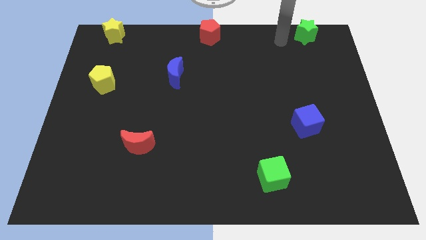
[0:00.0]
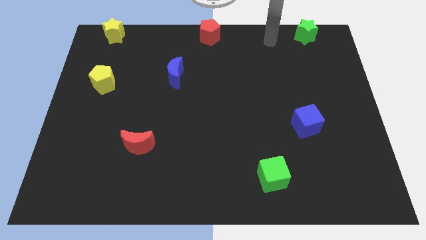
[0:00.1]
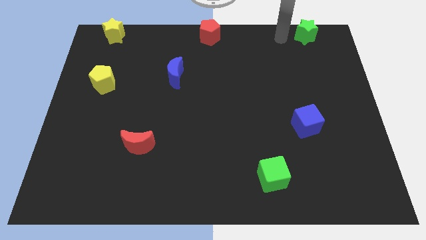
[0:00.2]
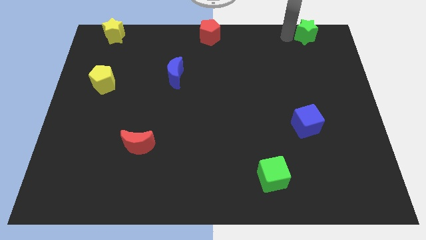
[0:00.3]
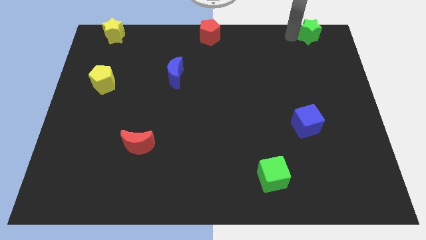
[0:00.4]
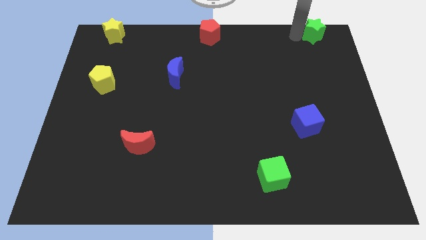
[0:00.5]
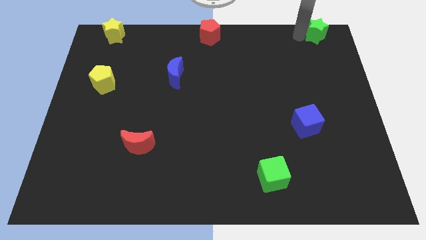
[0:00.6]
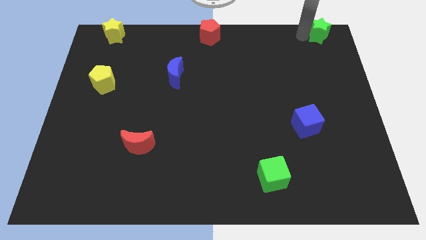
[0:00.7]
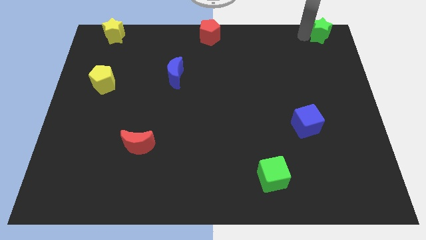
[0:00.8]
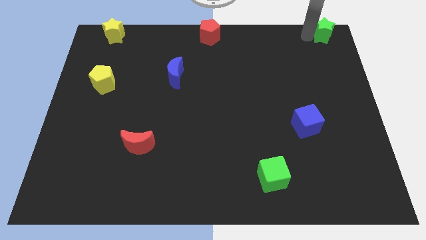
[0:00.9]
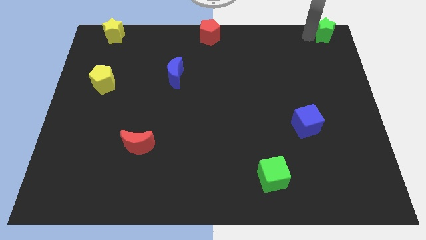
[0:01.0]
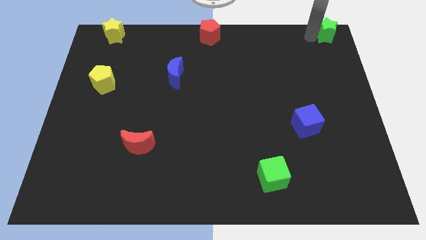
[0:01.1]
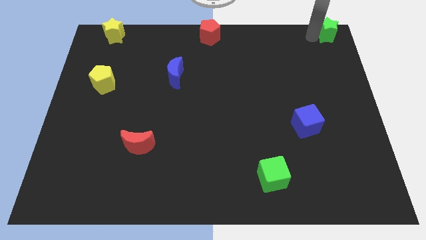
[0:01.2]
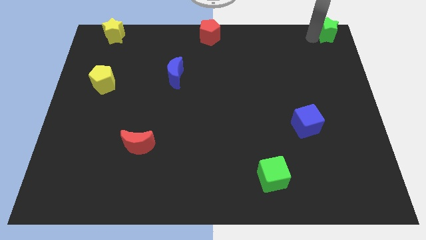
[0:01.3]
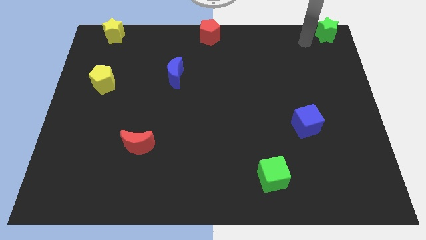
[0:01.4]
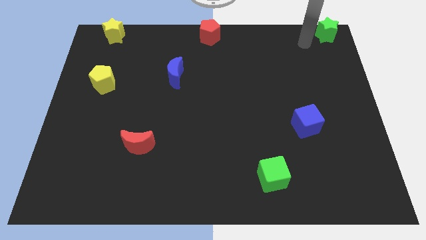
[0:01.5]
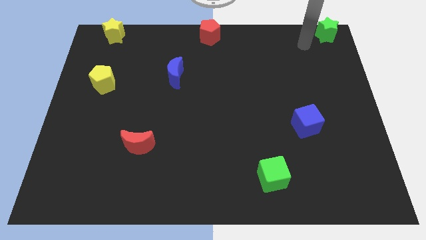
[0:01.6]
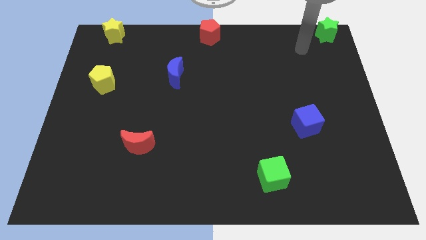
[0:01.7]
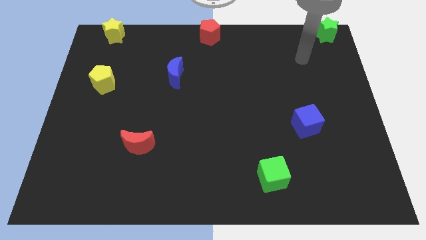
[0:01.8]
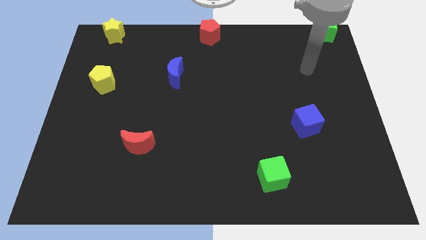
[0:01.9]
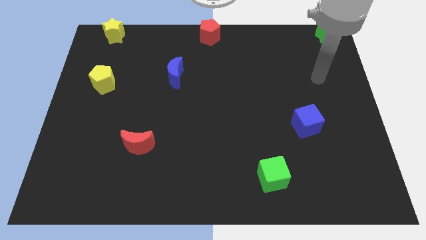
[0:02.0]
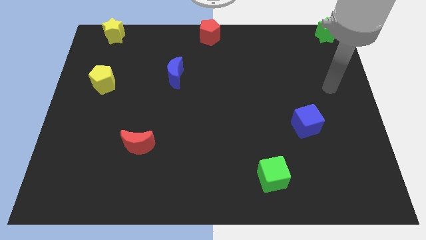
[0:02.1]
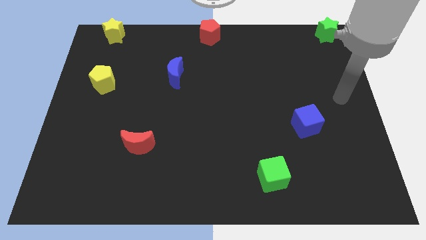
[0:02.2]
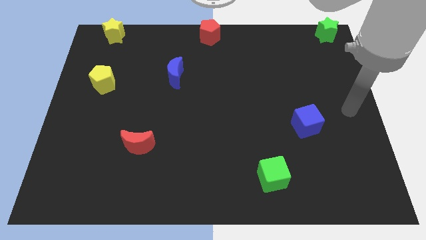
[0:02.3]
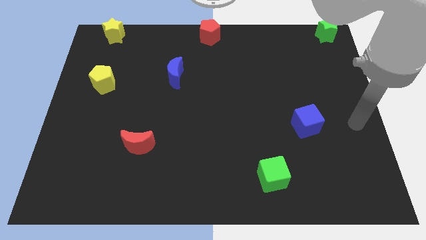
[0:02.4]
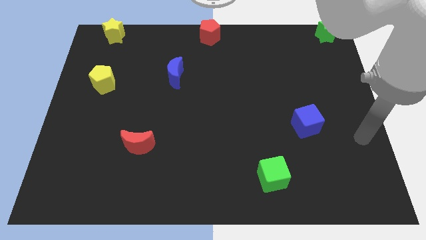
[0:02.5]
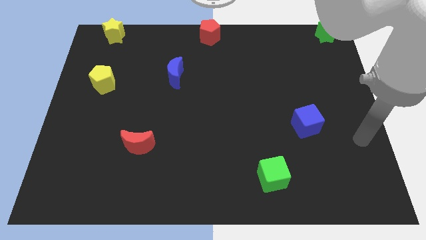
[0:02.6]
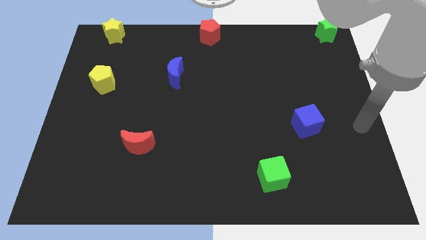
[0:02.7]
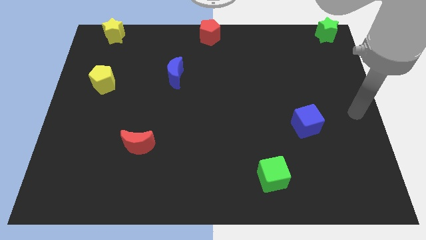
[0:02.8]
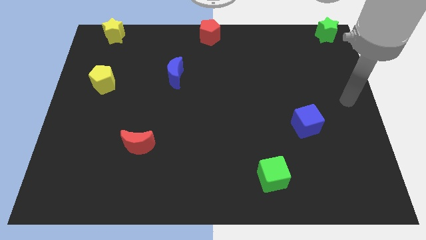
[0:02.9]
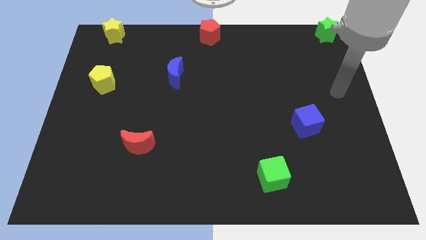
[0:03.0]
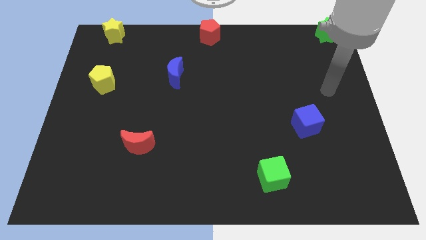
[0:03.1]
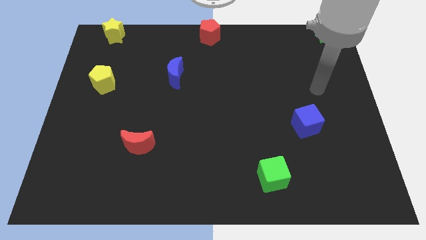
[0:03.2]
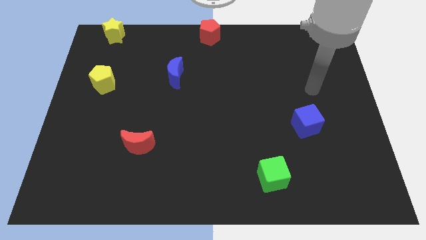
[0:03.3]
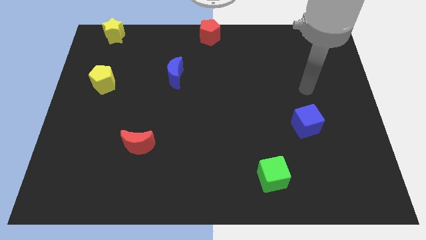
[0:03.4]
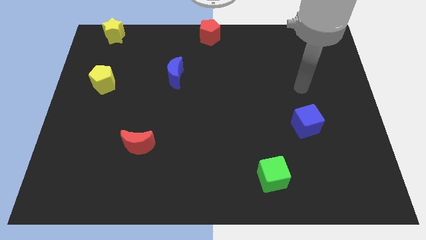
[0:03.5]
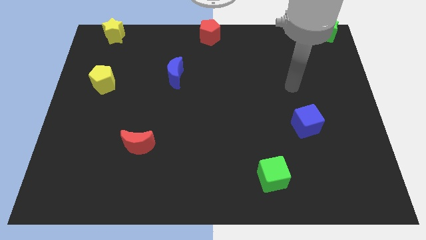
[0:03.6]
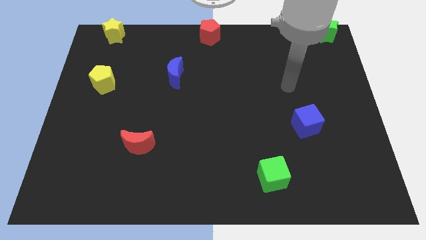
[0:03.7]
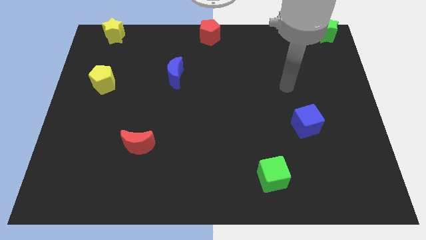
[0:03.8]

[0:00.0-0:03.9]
place the green star at the top right corner of the board

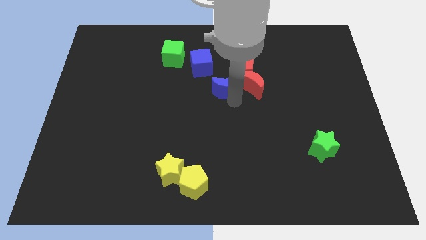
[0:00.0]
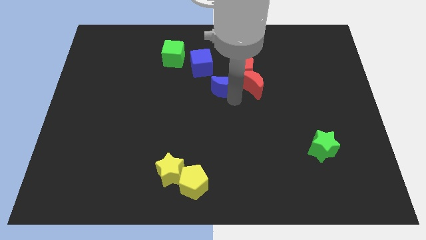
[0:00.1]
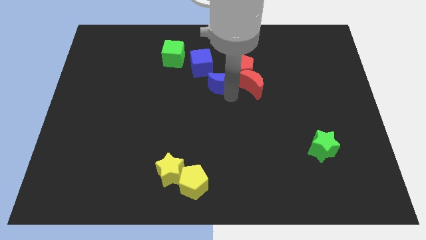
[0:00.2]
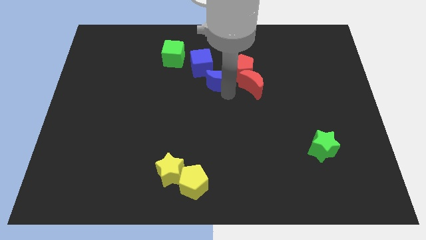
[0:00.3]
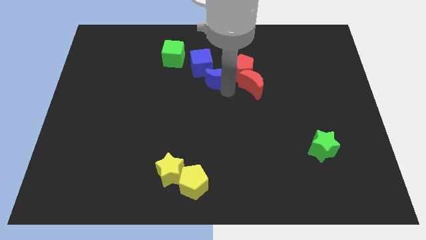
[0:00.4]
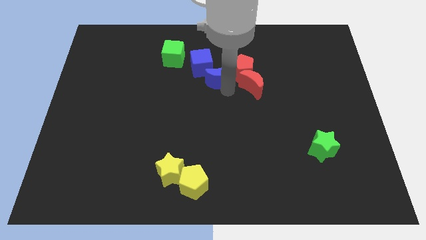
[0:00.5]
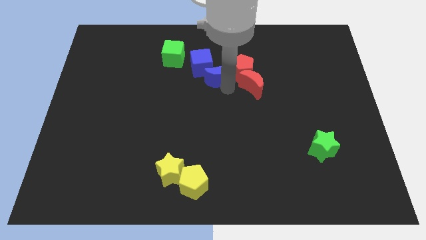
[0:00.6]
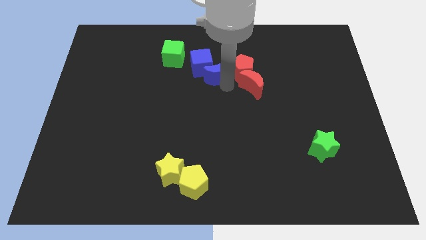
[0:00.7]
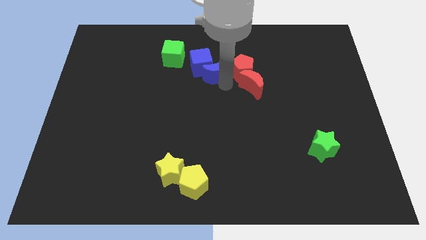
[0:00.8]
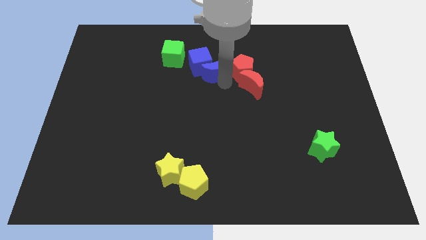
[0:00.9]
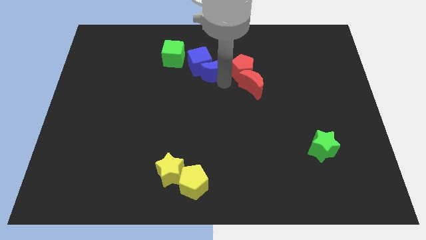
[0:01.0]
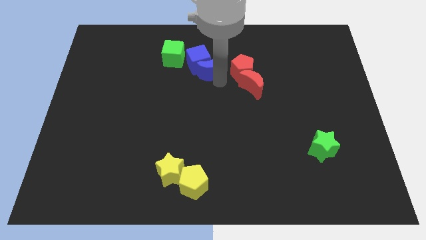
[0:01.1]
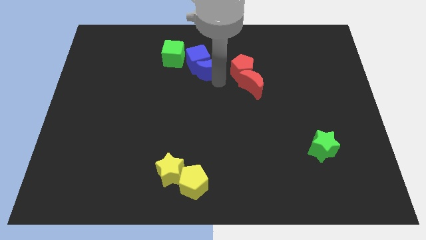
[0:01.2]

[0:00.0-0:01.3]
push the blue crescent into the blue cube

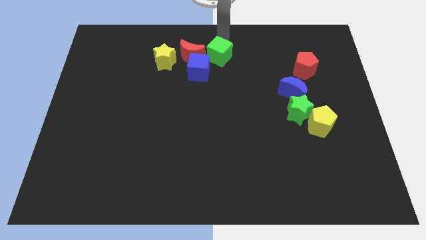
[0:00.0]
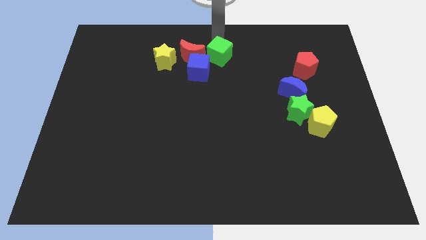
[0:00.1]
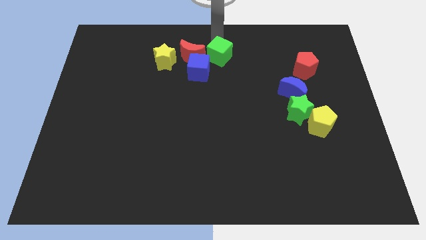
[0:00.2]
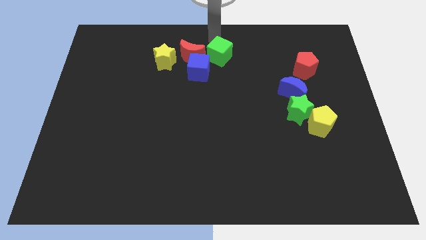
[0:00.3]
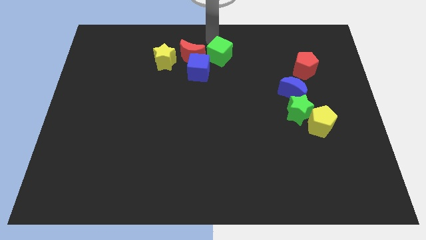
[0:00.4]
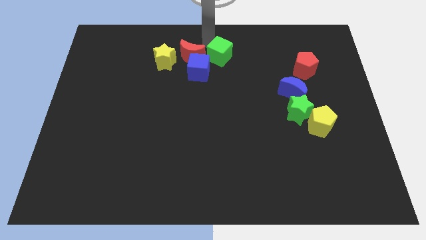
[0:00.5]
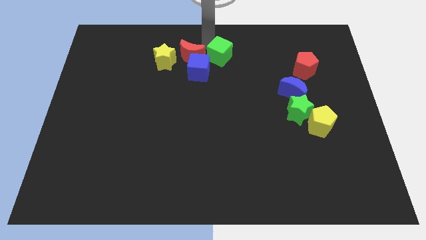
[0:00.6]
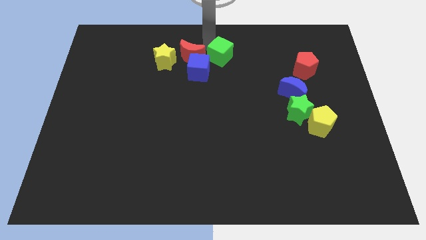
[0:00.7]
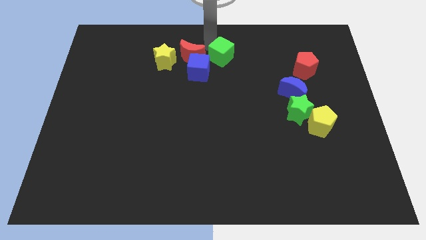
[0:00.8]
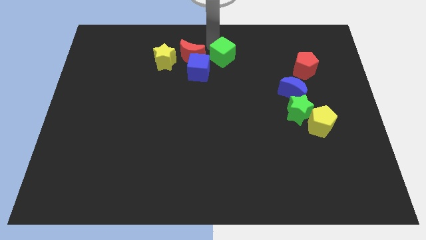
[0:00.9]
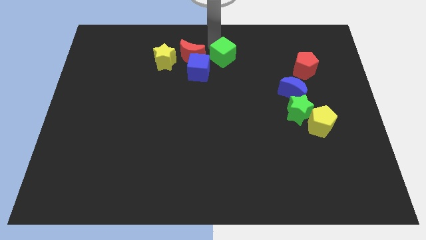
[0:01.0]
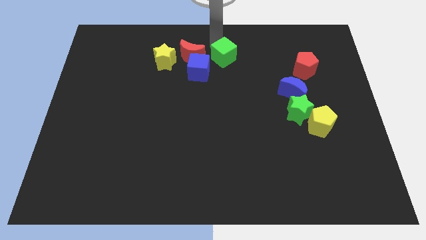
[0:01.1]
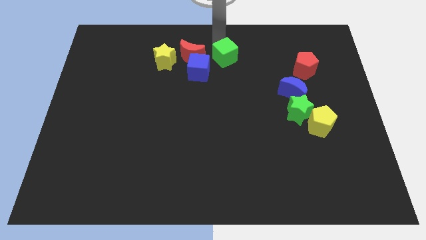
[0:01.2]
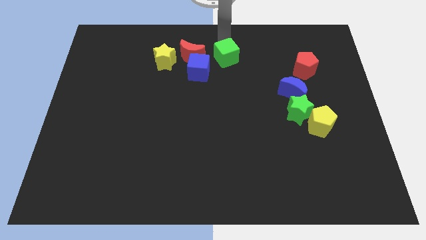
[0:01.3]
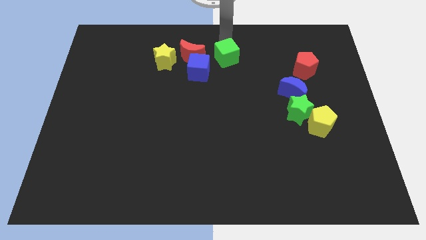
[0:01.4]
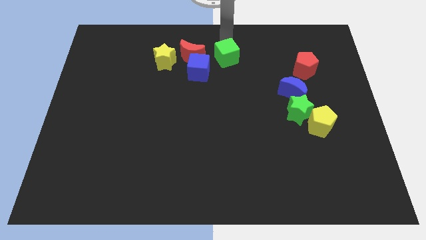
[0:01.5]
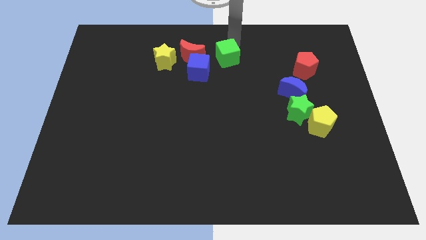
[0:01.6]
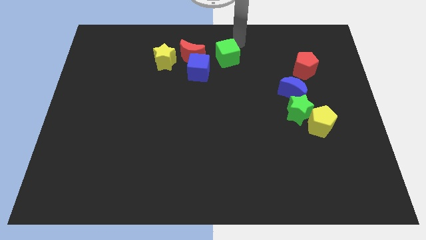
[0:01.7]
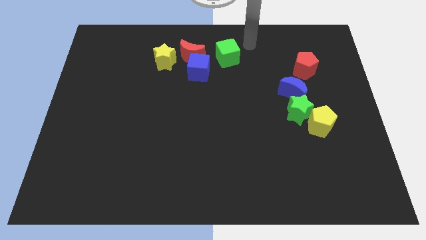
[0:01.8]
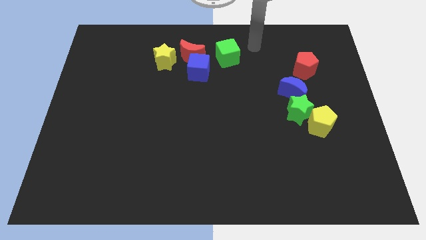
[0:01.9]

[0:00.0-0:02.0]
move the green cube slightly away from the red crescent

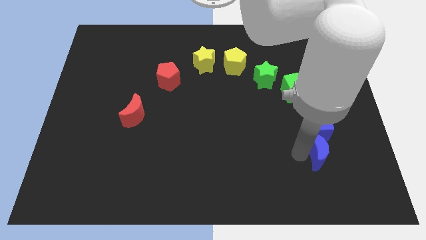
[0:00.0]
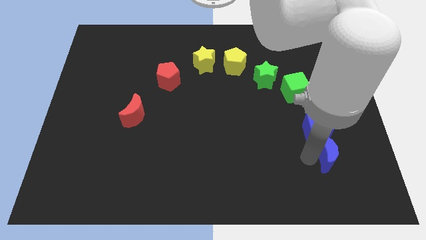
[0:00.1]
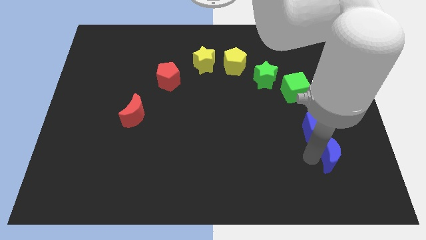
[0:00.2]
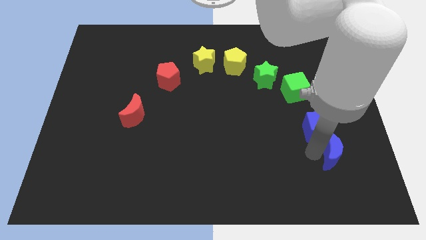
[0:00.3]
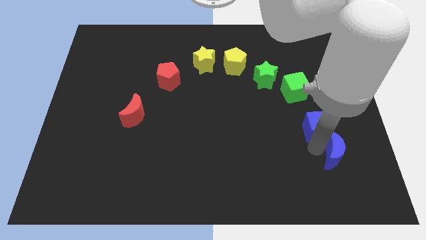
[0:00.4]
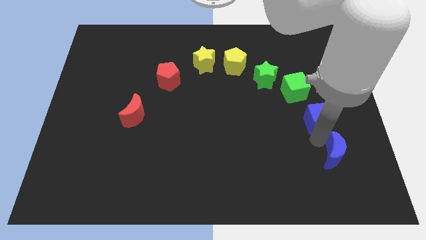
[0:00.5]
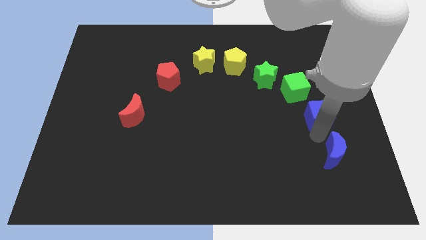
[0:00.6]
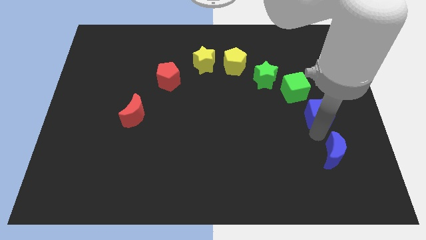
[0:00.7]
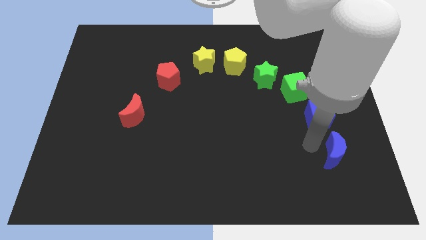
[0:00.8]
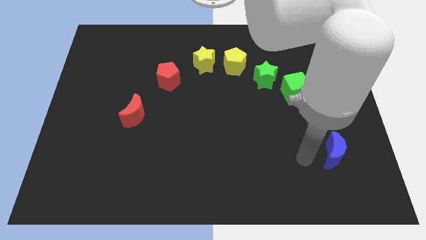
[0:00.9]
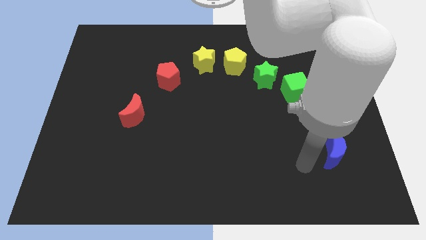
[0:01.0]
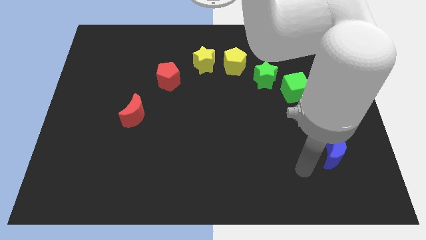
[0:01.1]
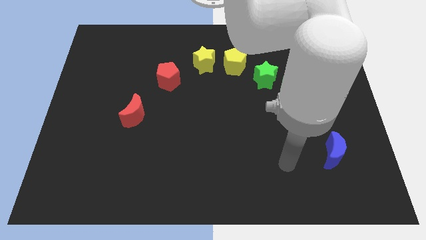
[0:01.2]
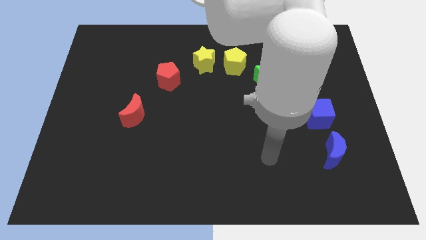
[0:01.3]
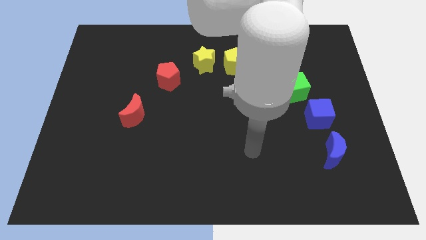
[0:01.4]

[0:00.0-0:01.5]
separate the blue cube from the blue crescent

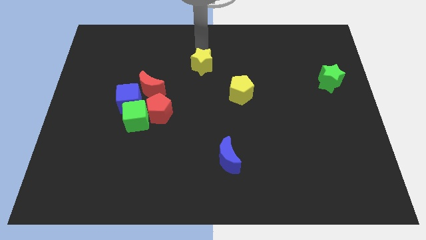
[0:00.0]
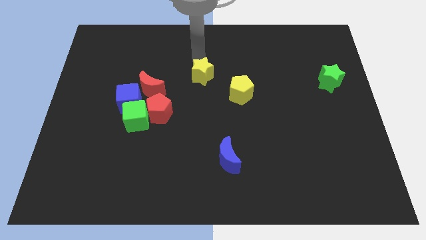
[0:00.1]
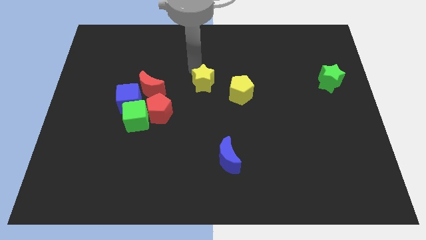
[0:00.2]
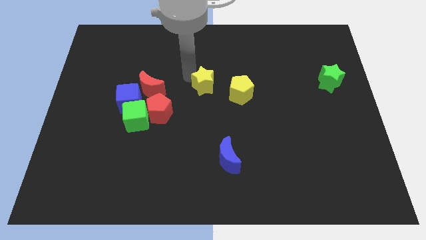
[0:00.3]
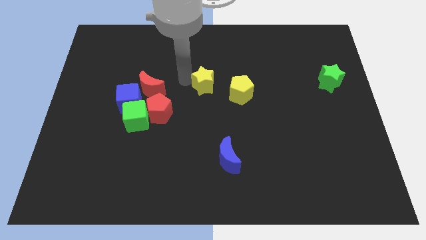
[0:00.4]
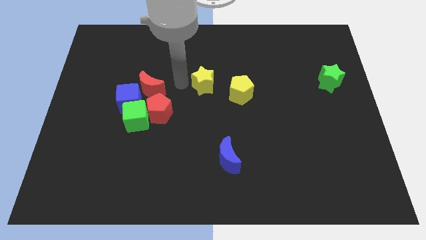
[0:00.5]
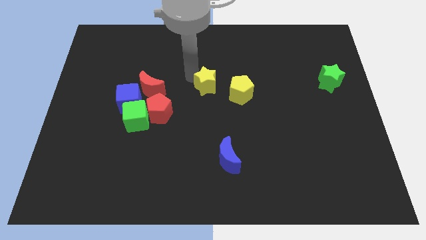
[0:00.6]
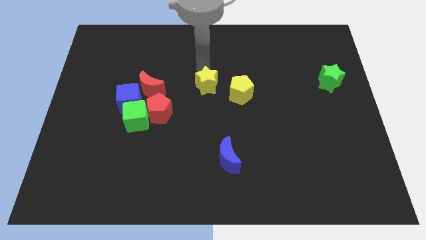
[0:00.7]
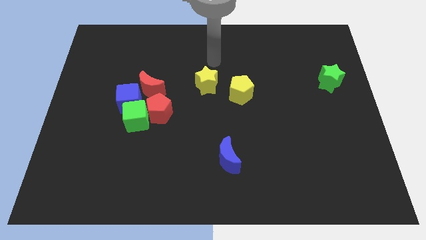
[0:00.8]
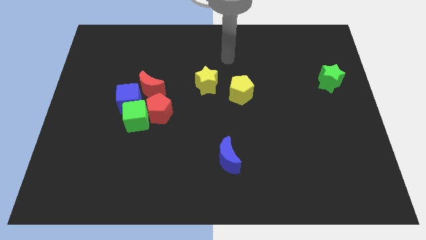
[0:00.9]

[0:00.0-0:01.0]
move the yellow star to the left of the yellow pentagon
